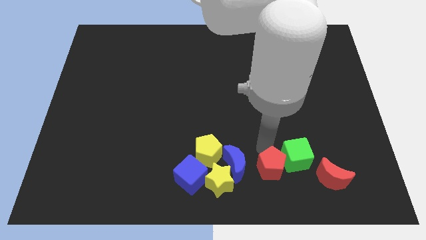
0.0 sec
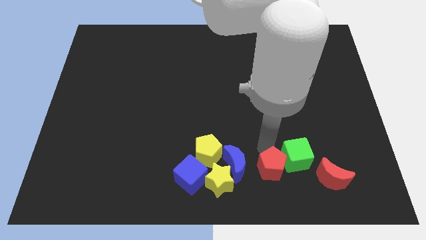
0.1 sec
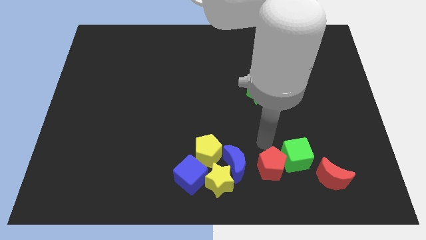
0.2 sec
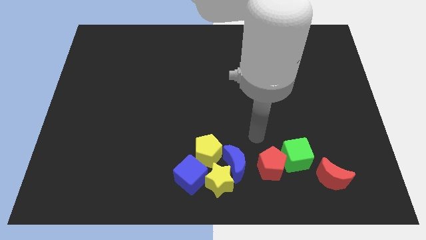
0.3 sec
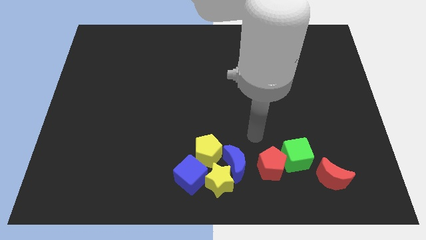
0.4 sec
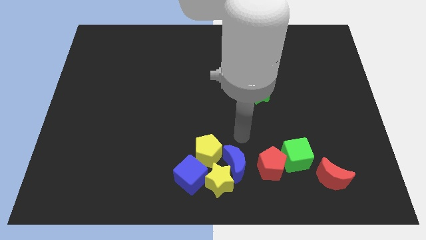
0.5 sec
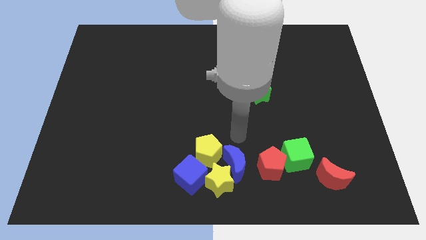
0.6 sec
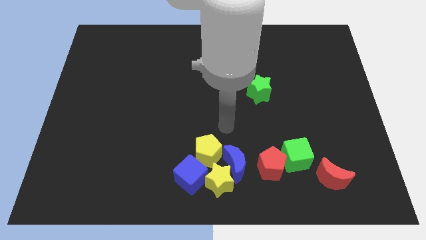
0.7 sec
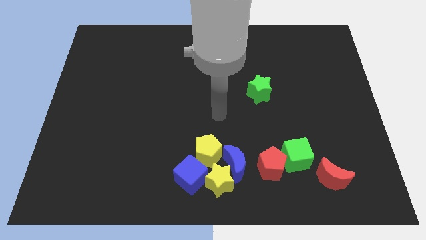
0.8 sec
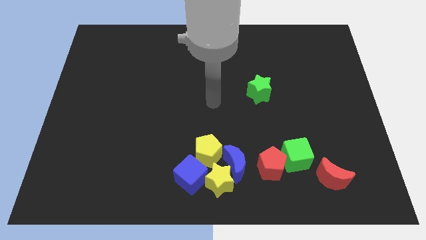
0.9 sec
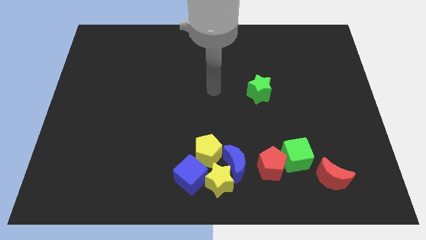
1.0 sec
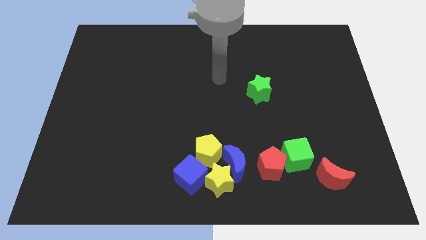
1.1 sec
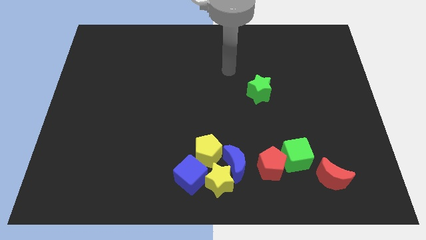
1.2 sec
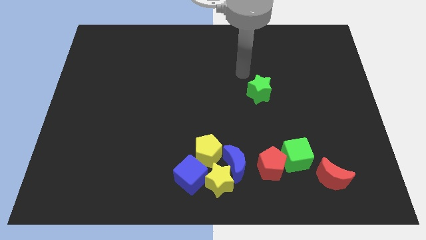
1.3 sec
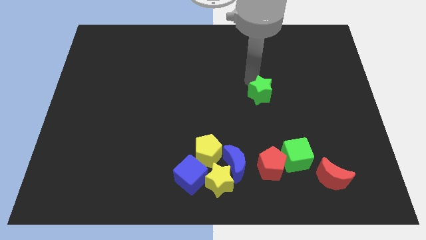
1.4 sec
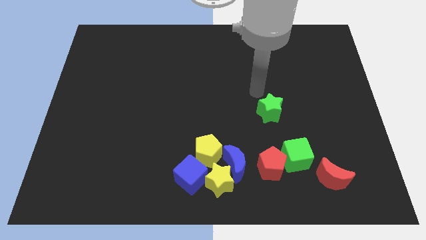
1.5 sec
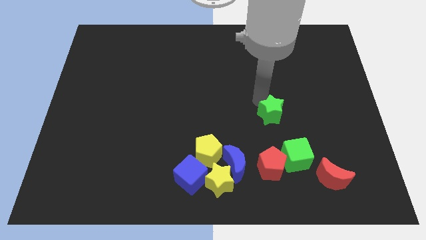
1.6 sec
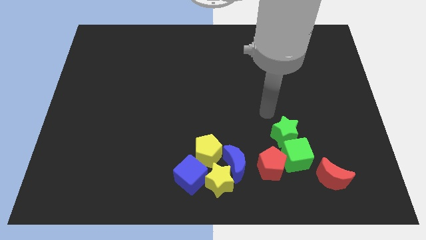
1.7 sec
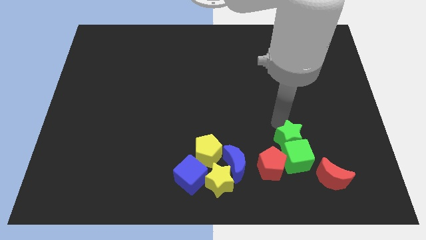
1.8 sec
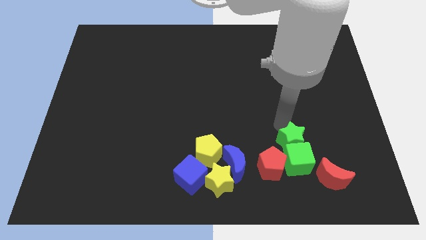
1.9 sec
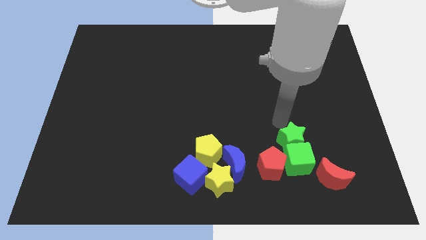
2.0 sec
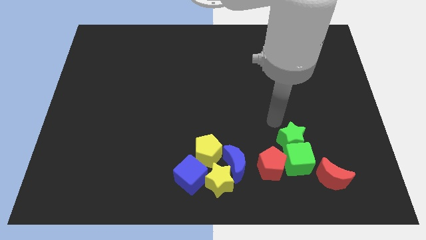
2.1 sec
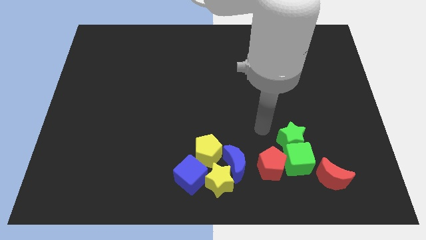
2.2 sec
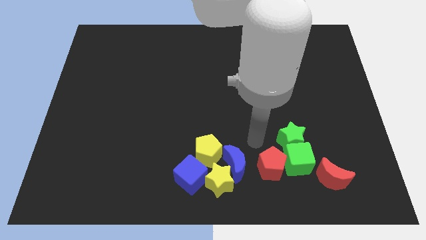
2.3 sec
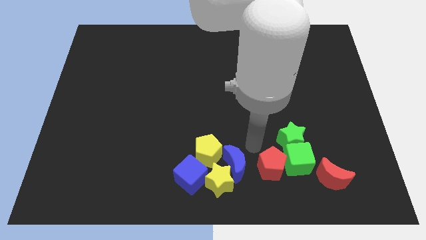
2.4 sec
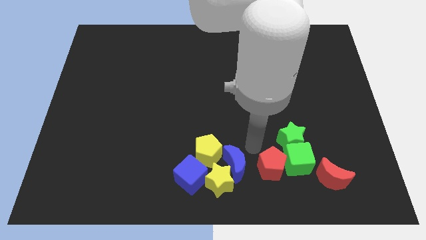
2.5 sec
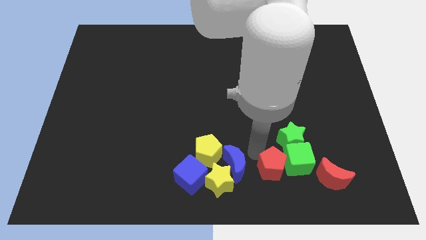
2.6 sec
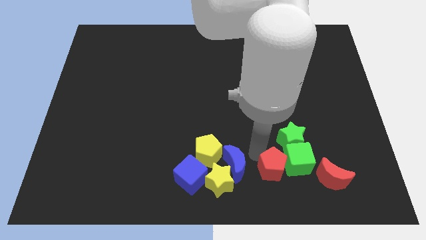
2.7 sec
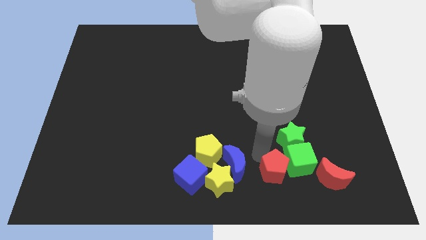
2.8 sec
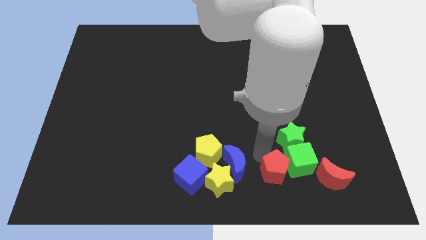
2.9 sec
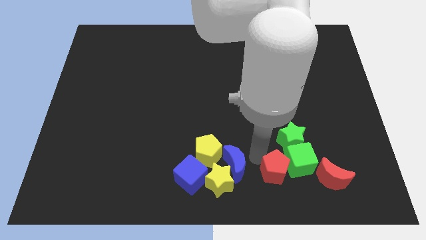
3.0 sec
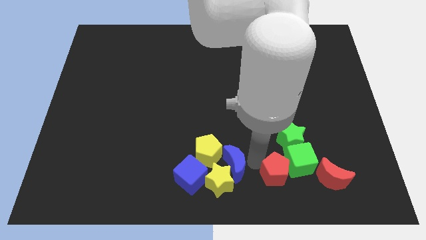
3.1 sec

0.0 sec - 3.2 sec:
move the green star to the top of the green cube

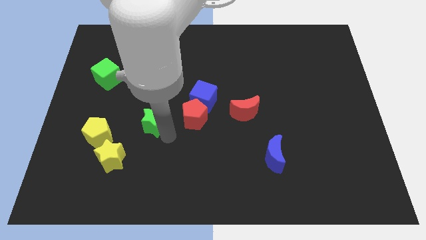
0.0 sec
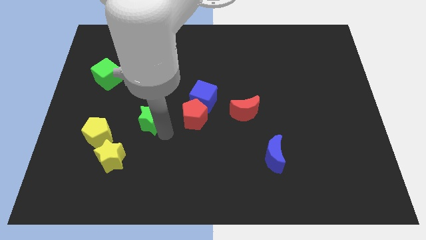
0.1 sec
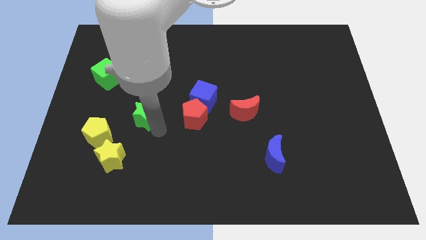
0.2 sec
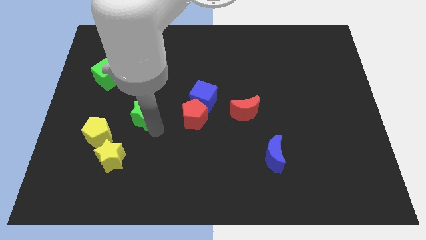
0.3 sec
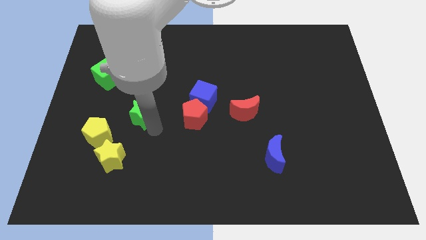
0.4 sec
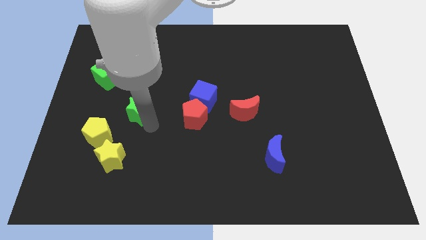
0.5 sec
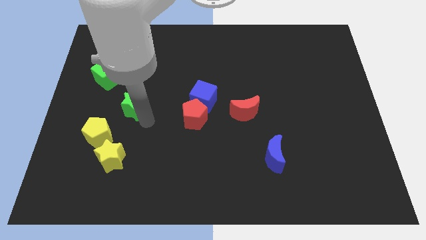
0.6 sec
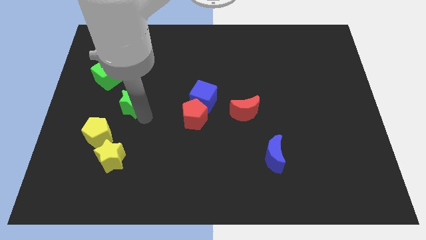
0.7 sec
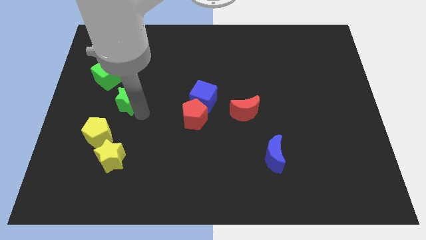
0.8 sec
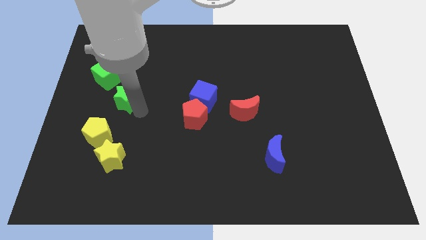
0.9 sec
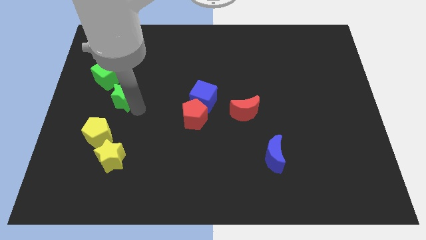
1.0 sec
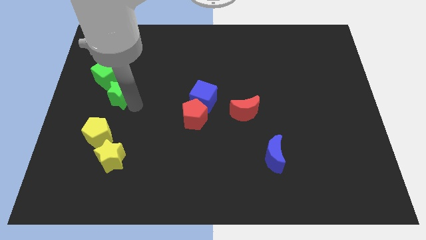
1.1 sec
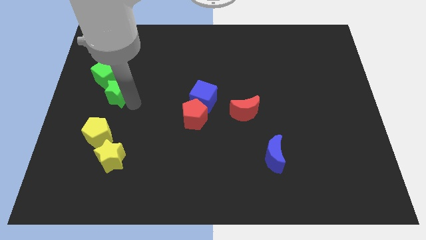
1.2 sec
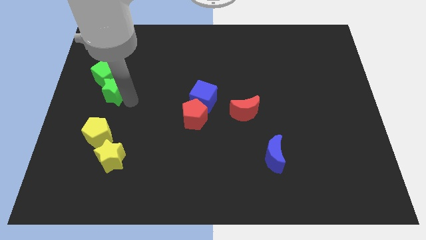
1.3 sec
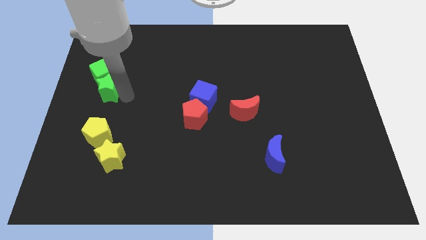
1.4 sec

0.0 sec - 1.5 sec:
place the green star down to the green cube

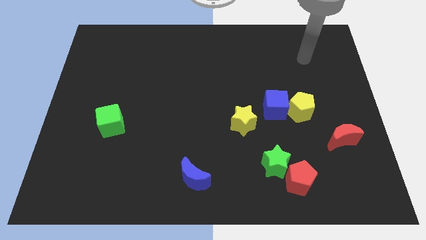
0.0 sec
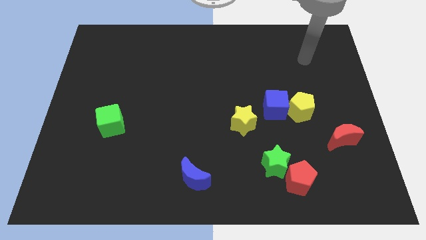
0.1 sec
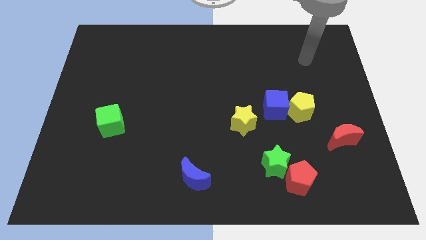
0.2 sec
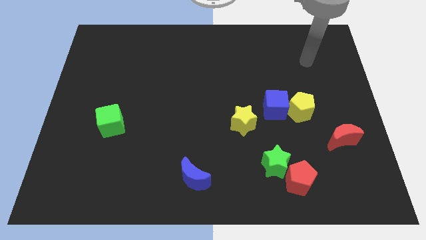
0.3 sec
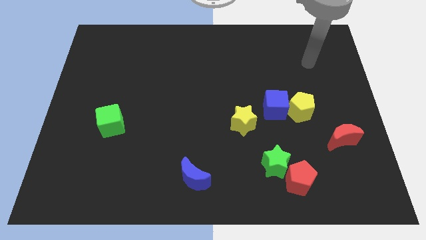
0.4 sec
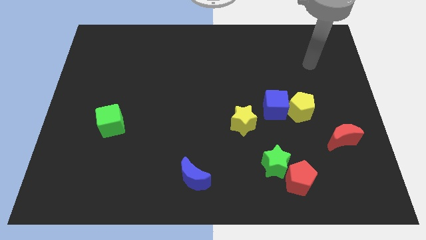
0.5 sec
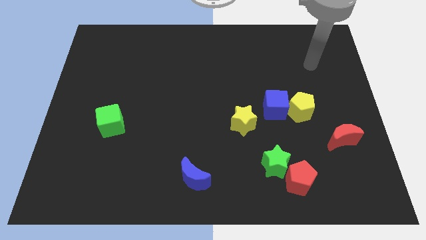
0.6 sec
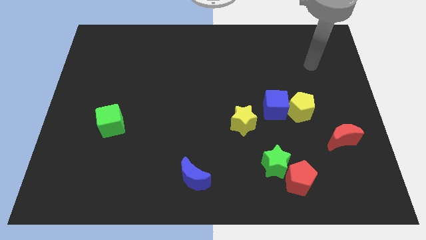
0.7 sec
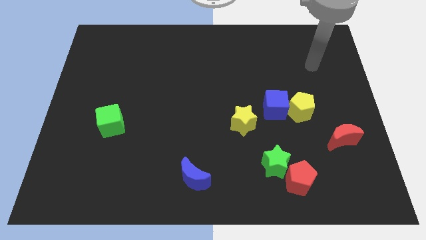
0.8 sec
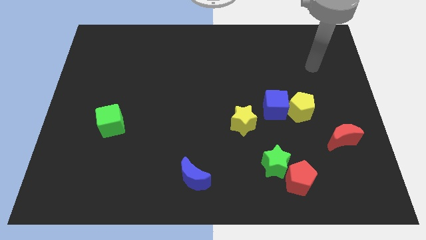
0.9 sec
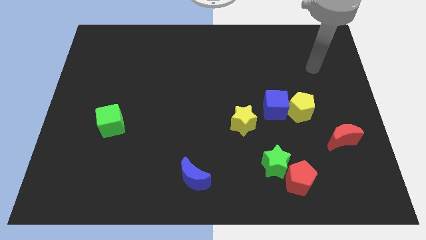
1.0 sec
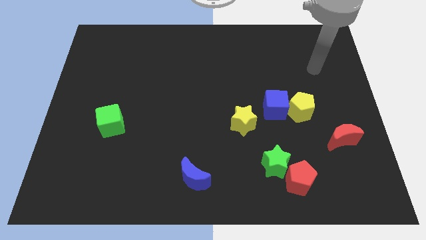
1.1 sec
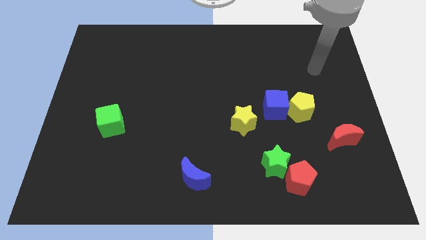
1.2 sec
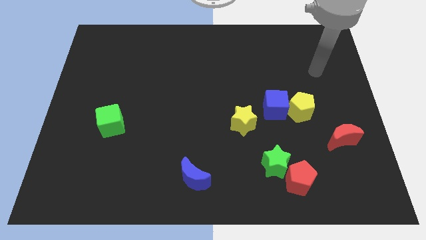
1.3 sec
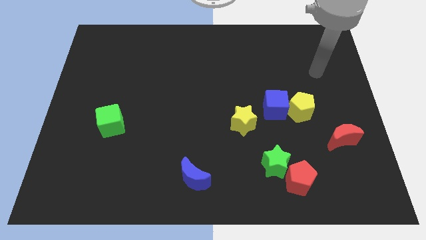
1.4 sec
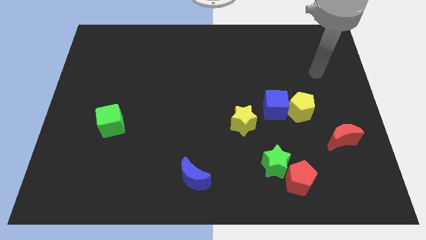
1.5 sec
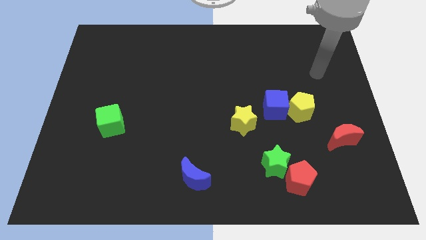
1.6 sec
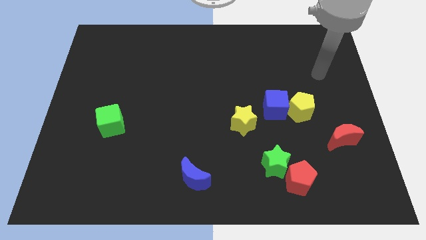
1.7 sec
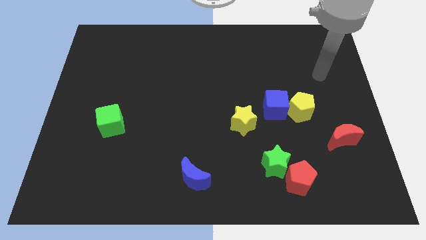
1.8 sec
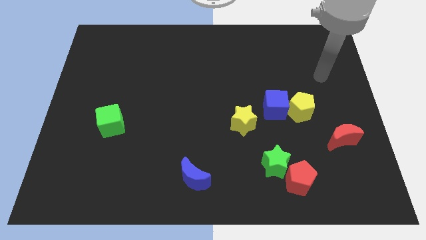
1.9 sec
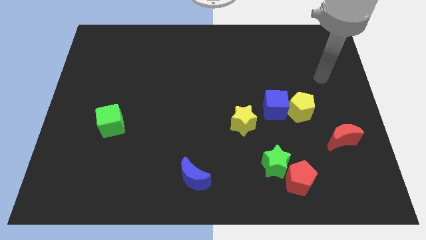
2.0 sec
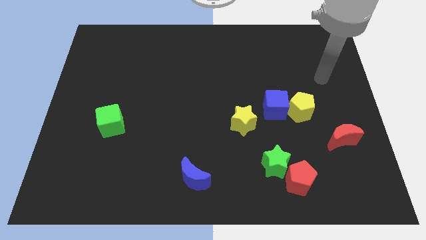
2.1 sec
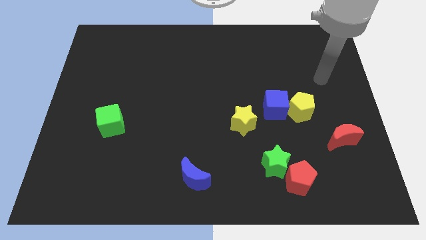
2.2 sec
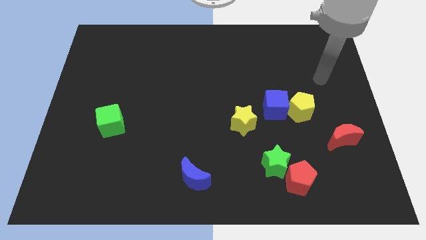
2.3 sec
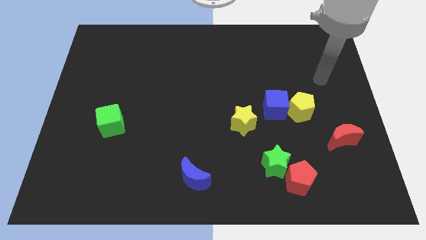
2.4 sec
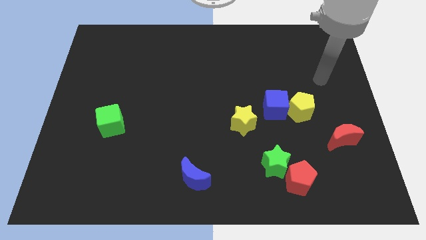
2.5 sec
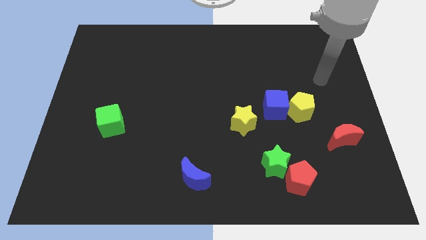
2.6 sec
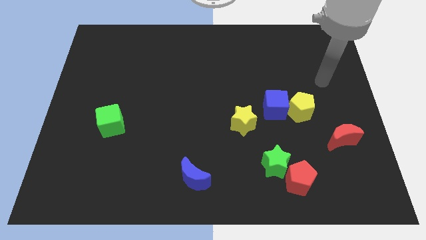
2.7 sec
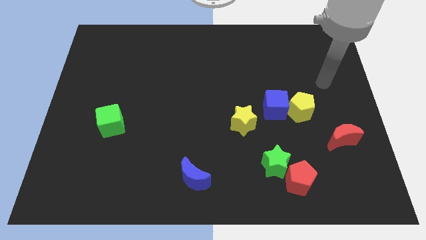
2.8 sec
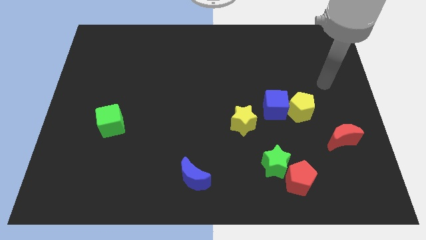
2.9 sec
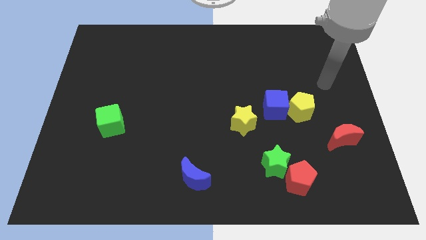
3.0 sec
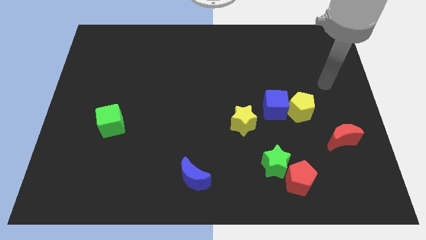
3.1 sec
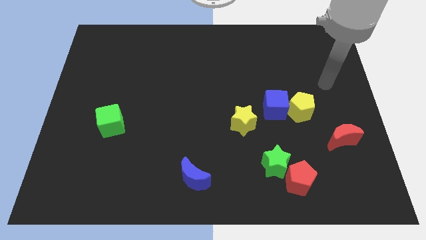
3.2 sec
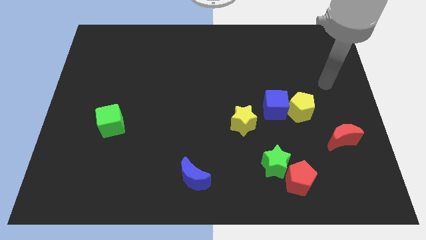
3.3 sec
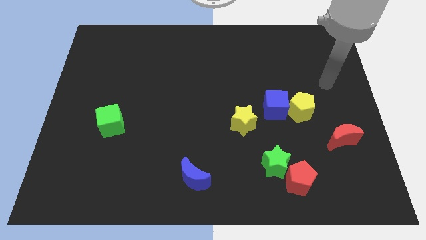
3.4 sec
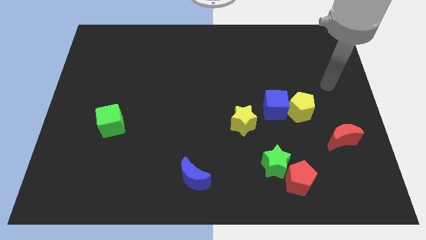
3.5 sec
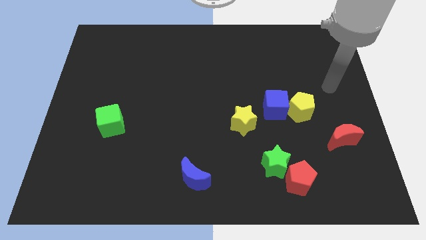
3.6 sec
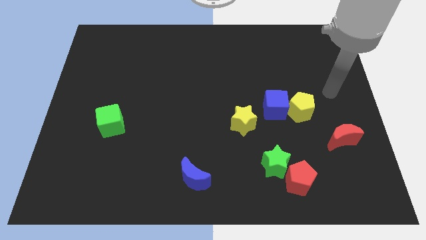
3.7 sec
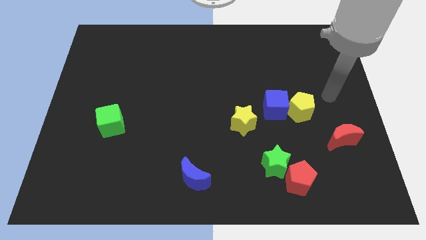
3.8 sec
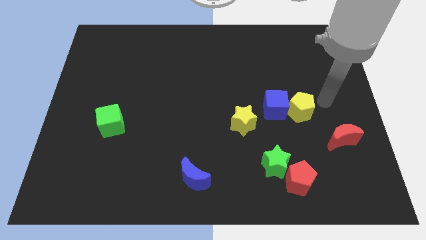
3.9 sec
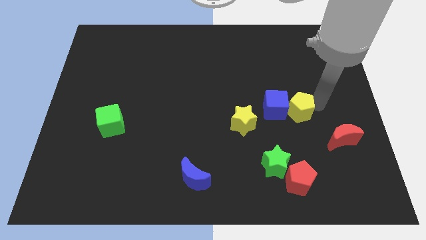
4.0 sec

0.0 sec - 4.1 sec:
move the arm right to the yellow pentagon

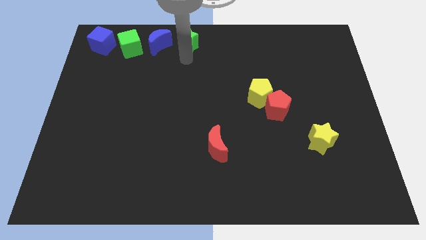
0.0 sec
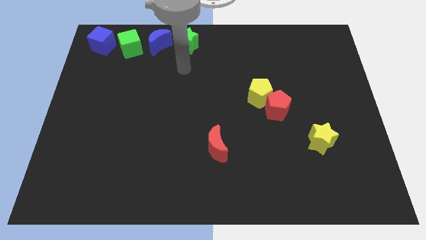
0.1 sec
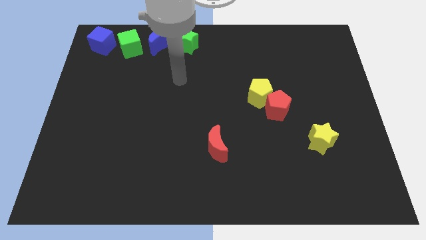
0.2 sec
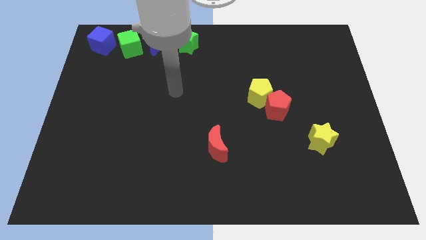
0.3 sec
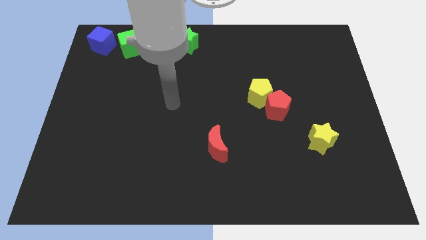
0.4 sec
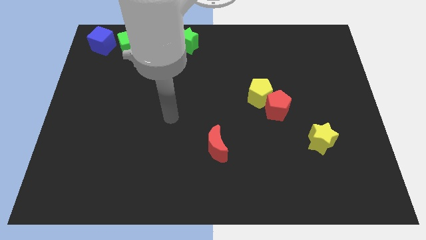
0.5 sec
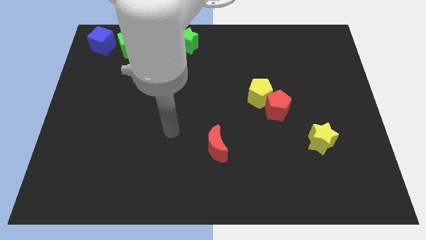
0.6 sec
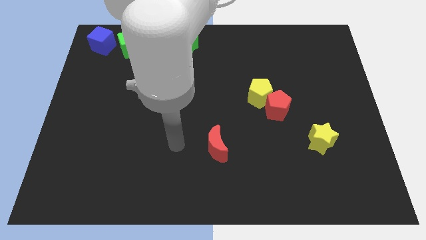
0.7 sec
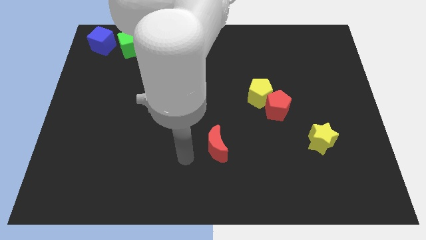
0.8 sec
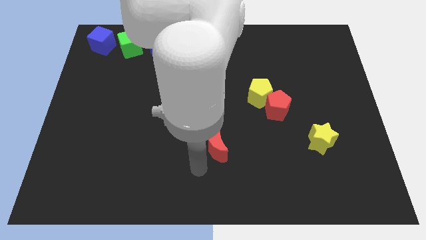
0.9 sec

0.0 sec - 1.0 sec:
move your arm away from green star
